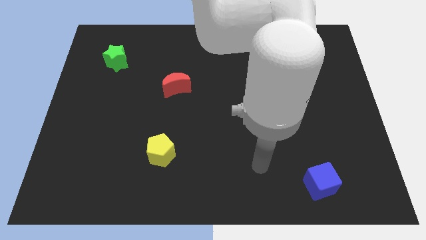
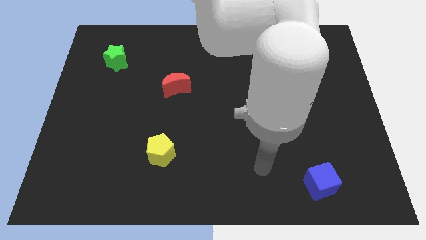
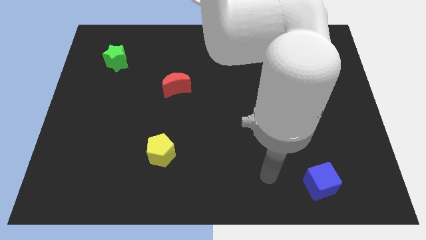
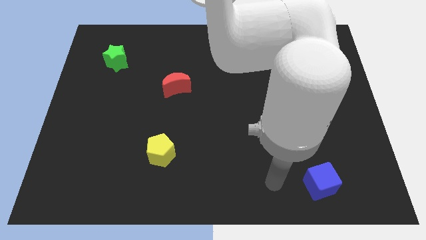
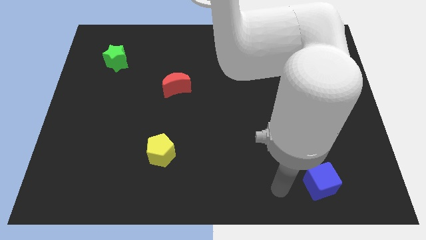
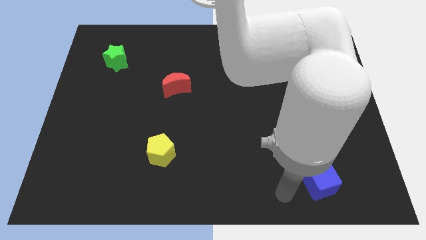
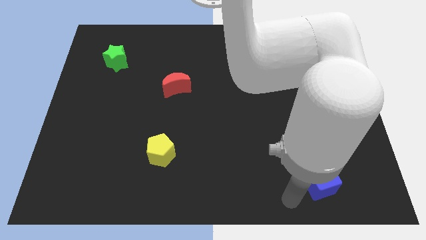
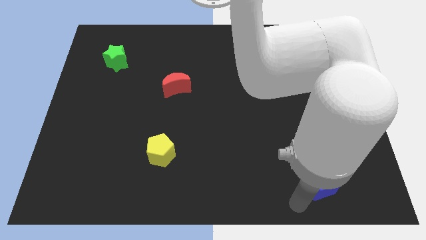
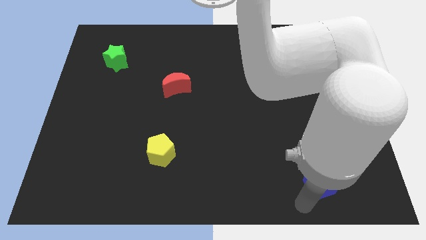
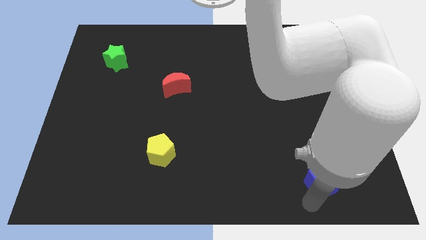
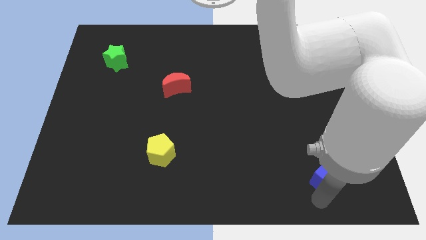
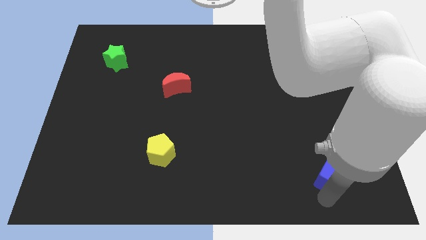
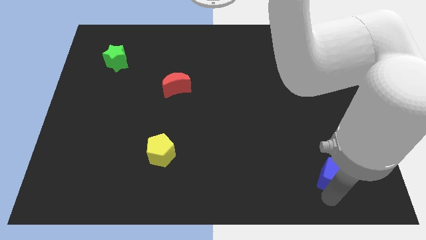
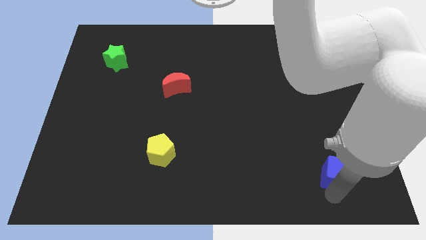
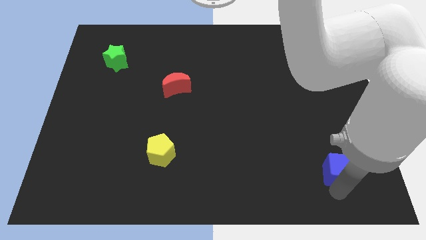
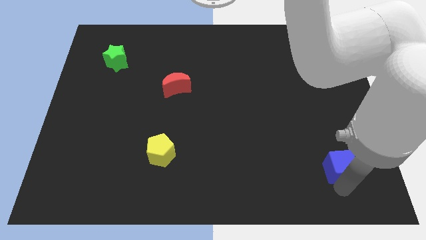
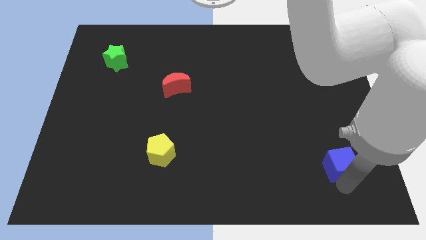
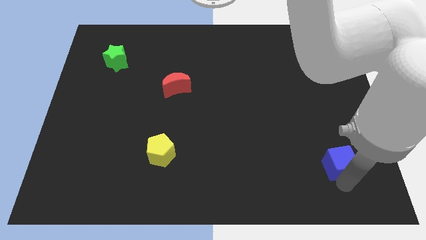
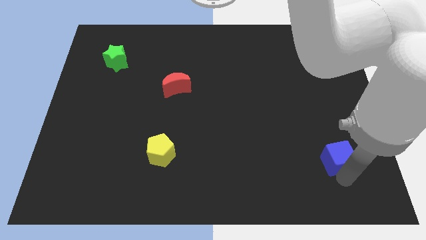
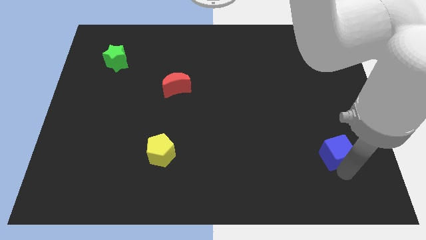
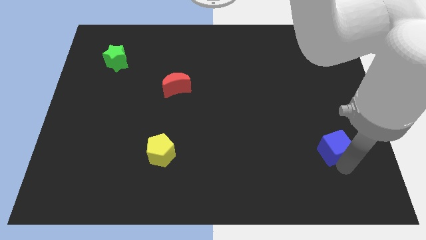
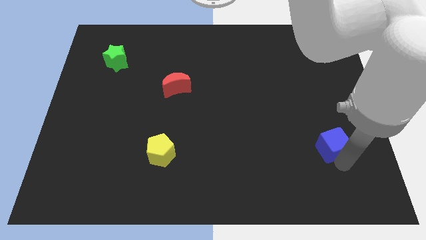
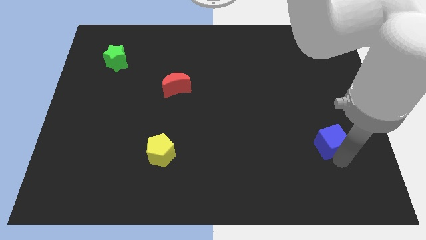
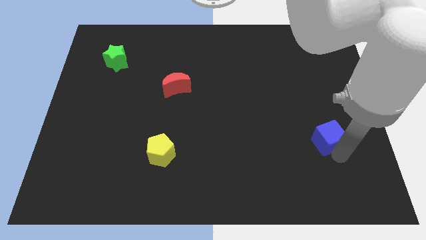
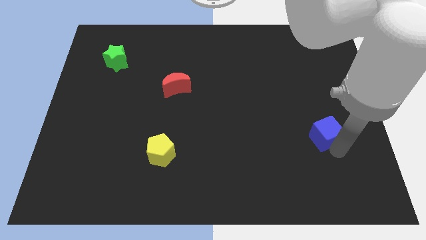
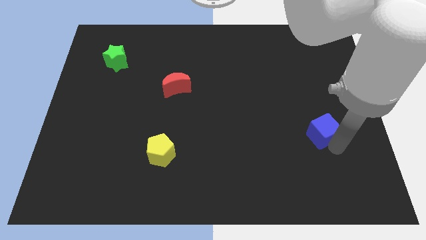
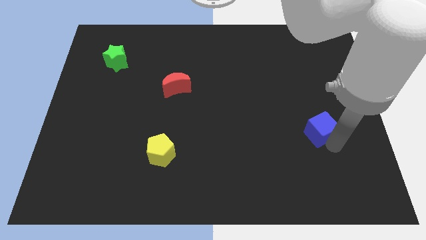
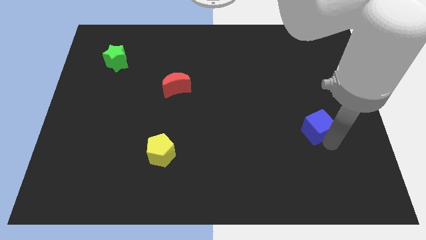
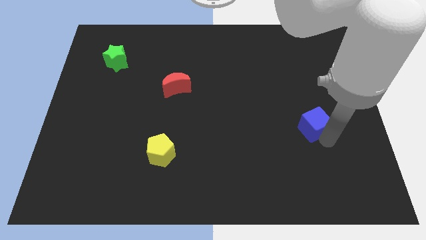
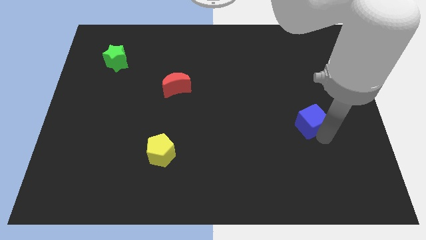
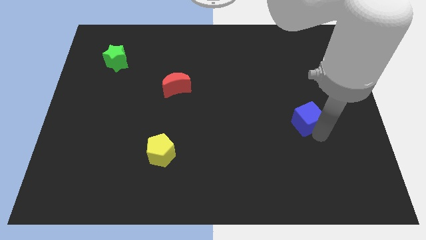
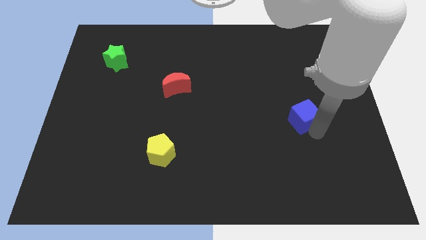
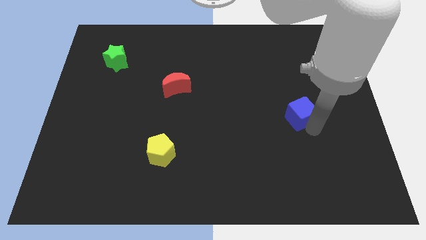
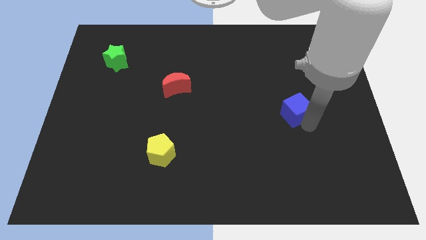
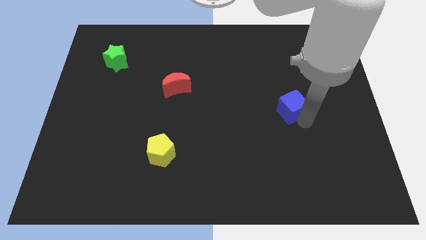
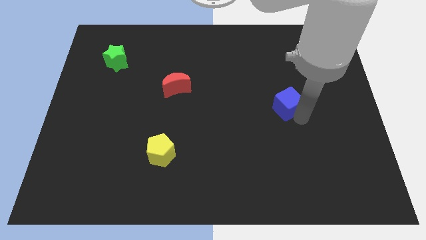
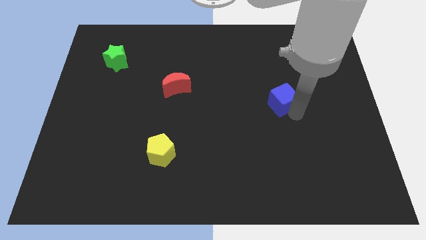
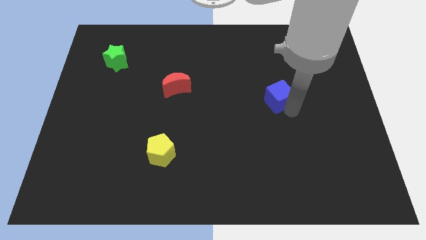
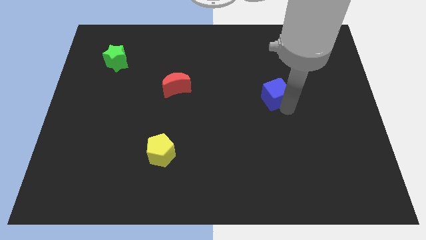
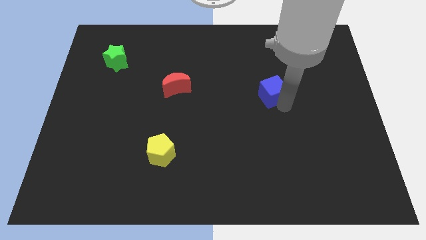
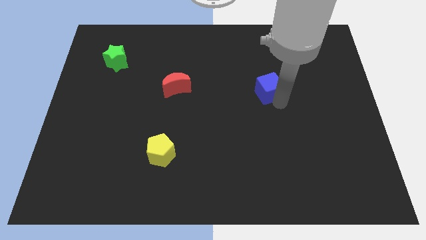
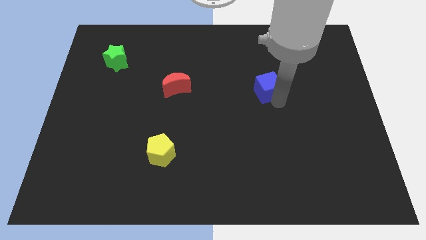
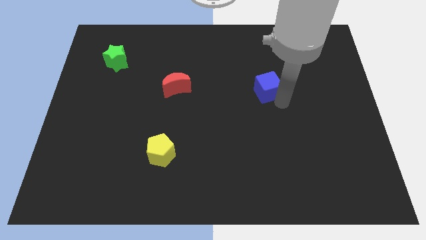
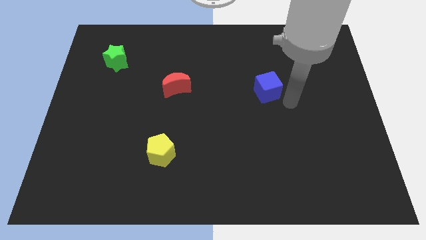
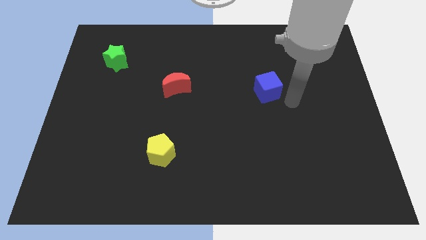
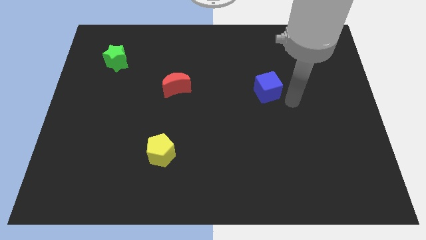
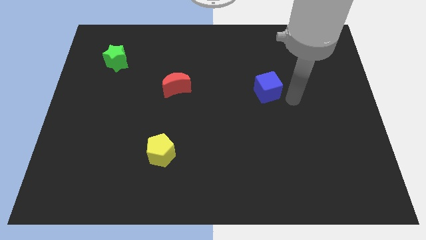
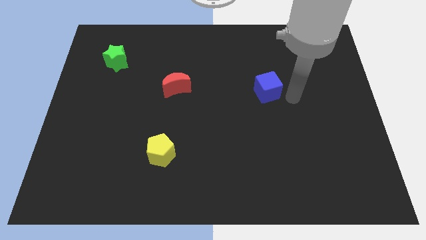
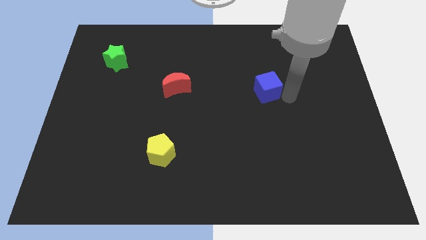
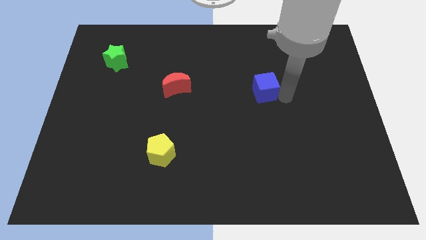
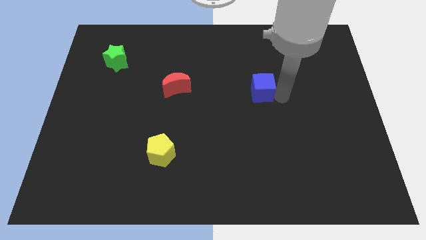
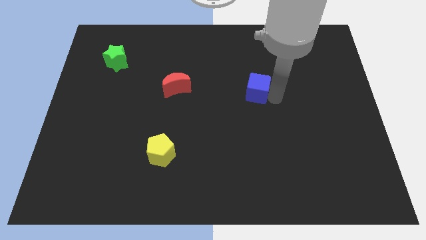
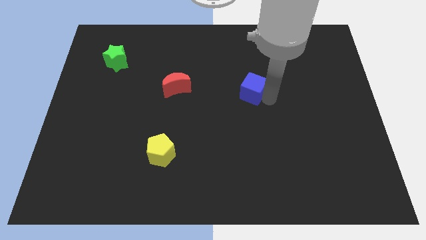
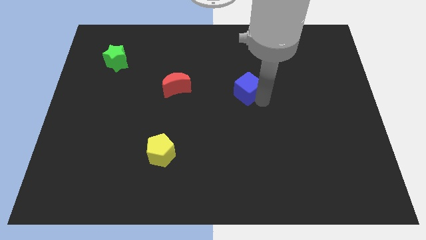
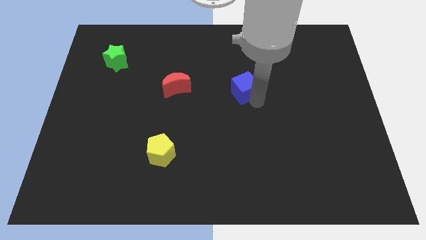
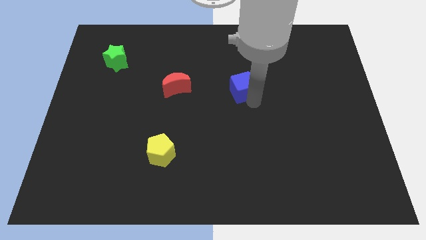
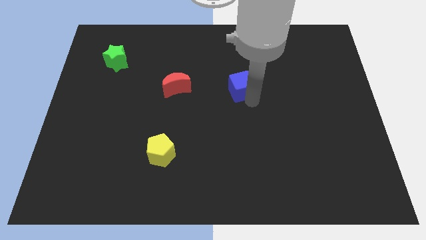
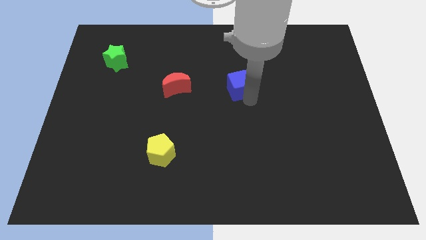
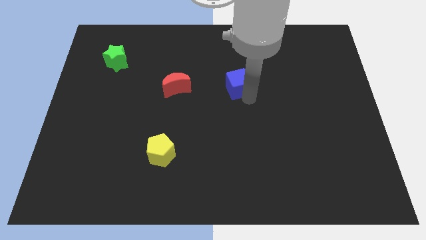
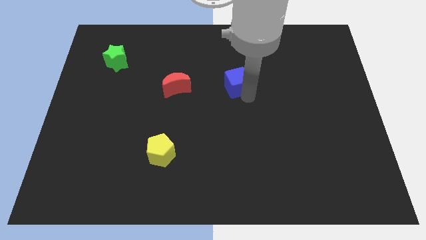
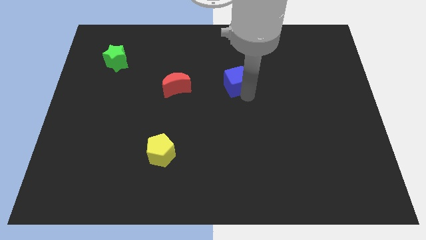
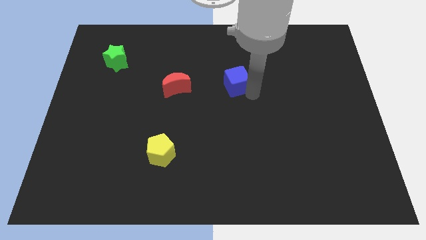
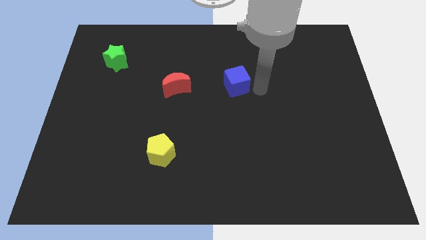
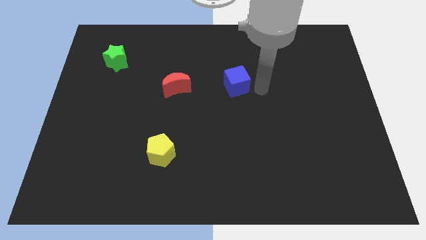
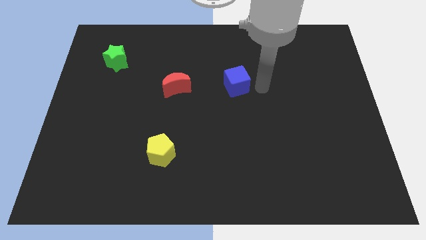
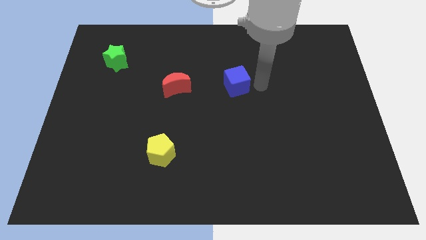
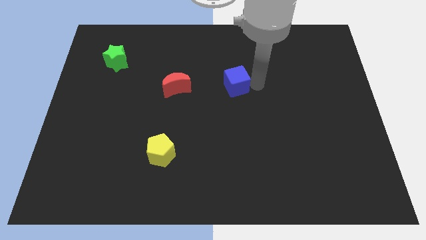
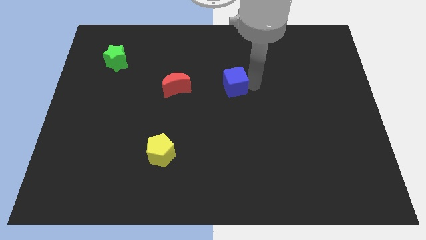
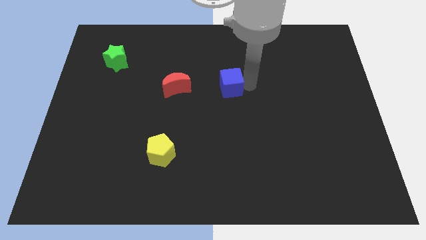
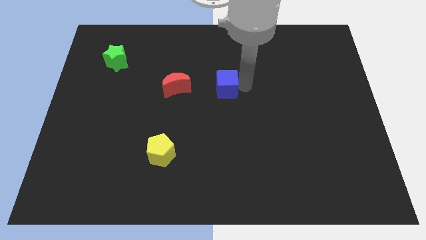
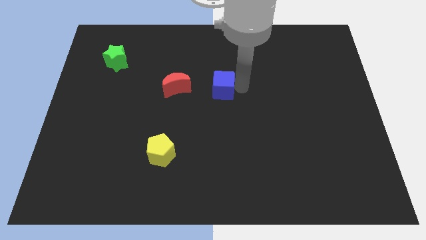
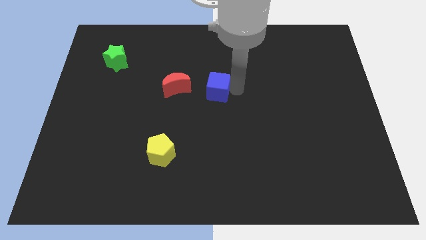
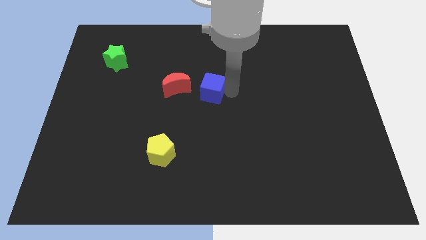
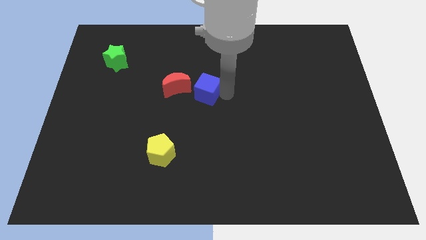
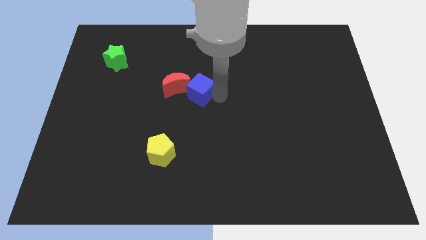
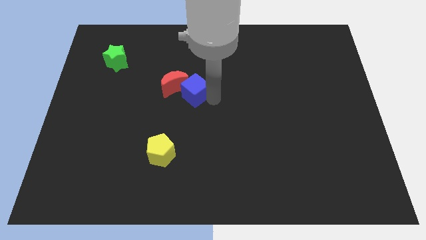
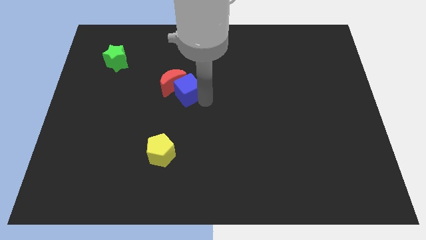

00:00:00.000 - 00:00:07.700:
move the cube towards the moon

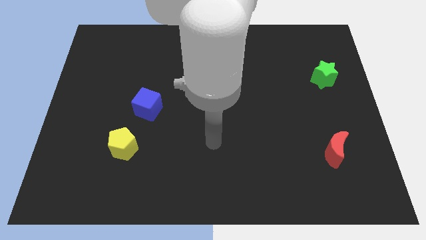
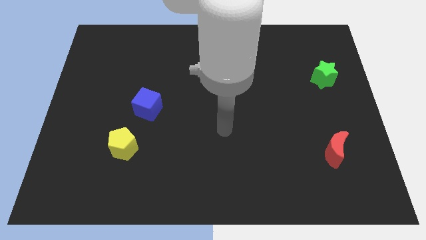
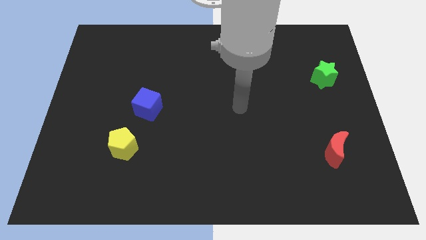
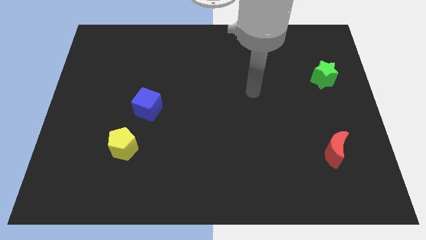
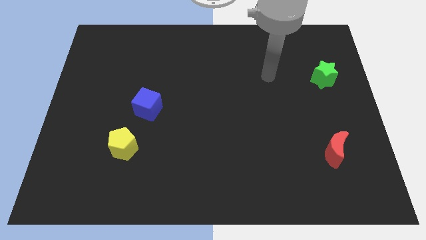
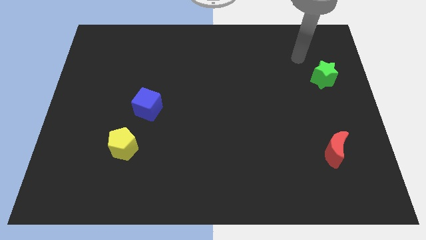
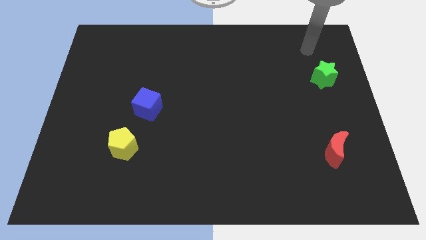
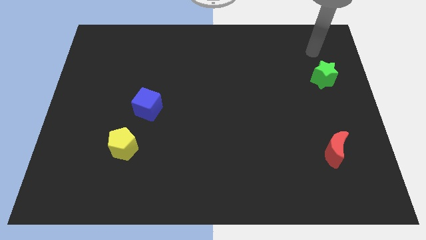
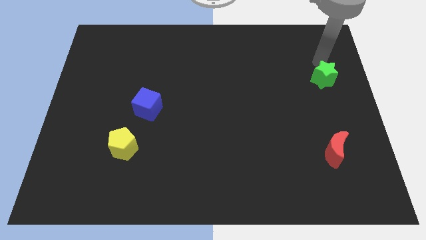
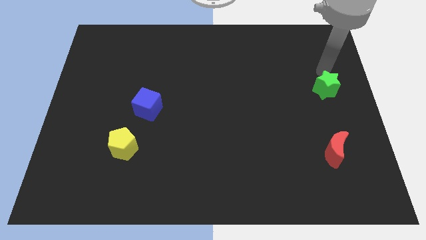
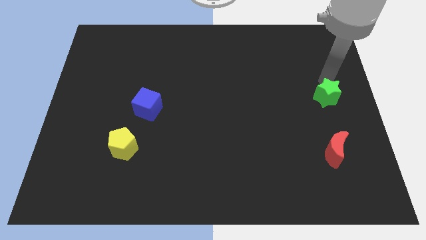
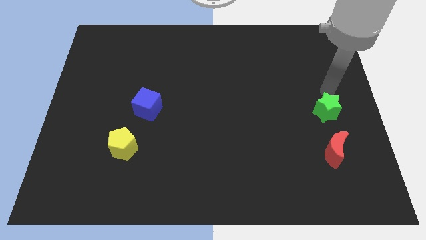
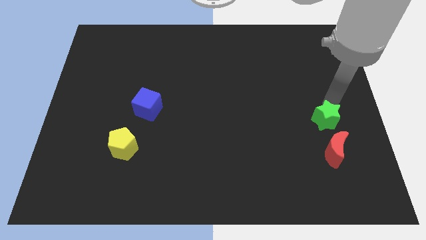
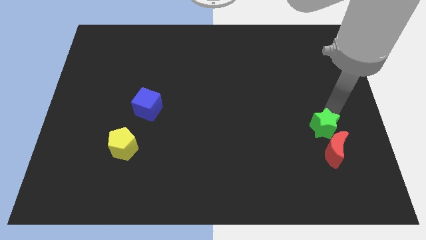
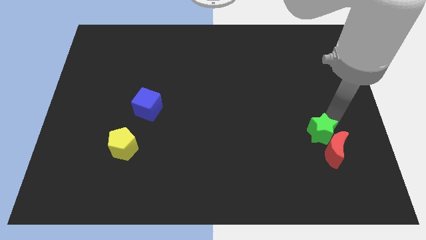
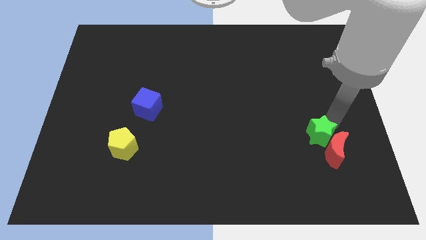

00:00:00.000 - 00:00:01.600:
put the green star towards the red block
